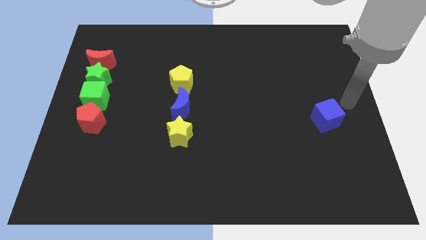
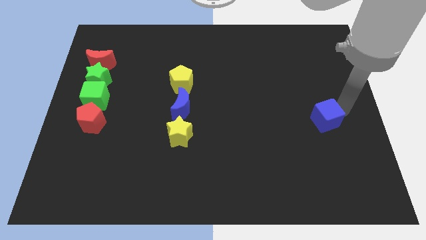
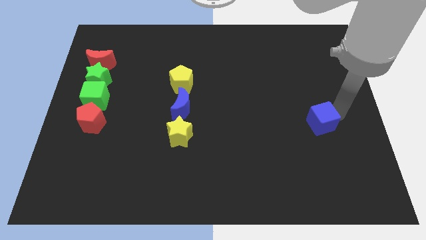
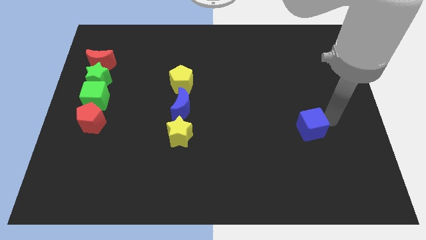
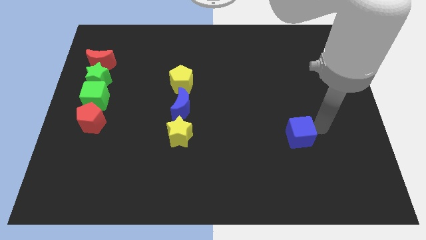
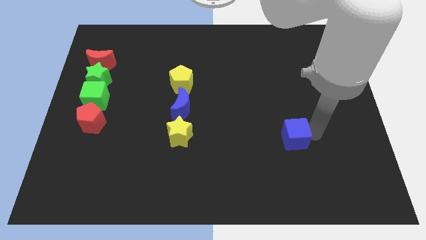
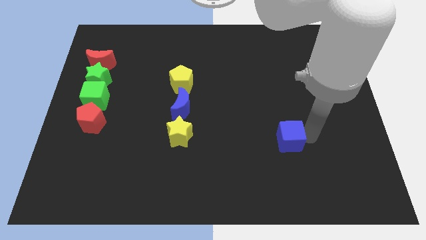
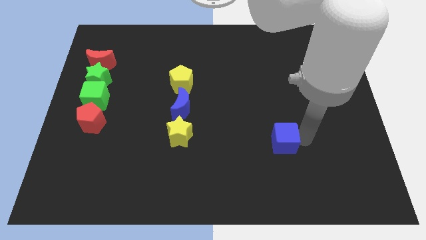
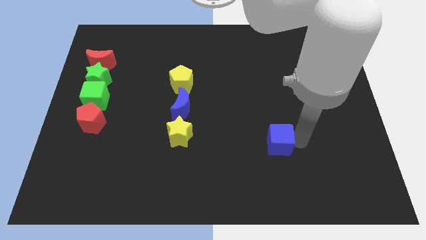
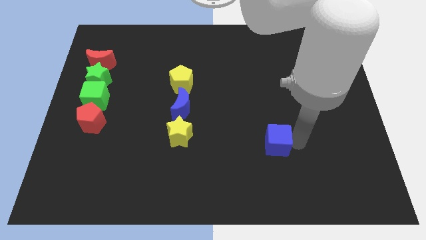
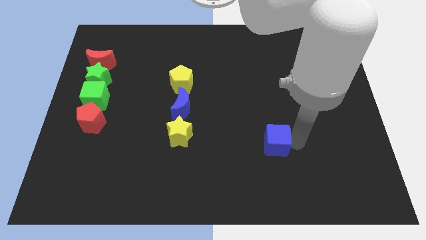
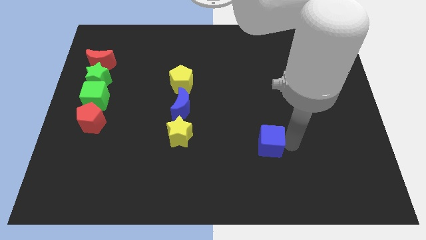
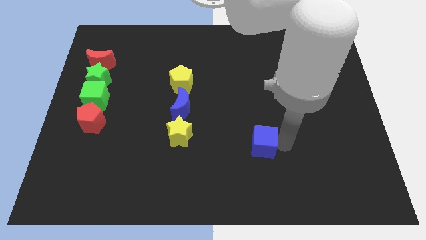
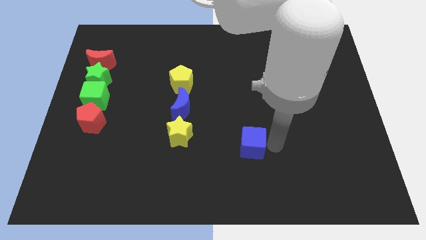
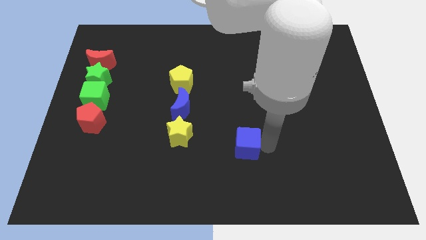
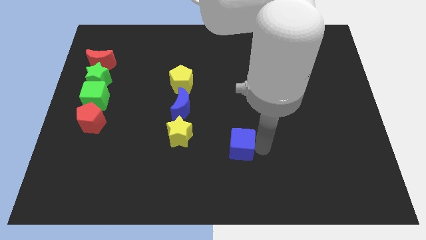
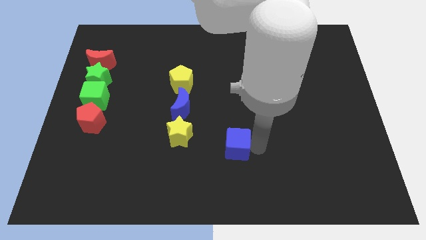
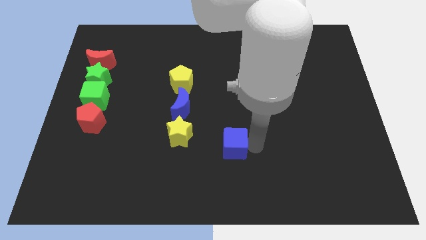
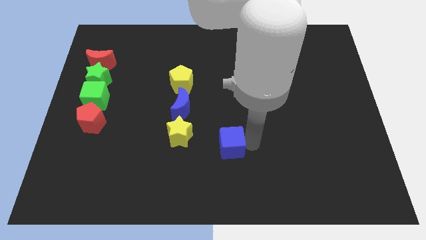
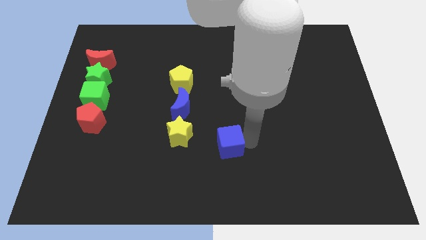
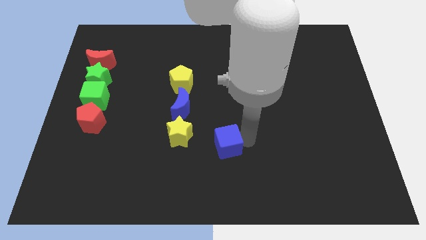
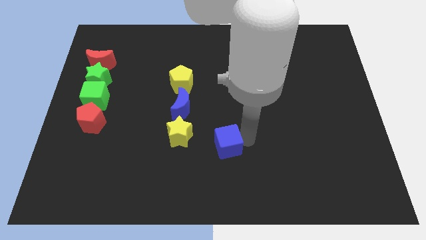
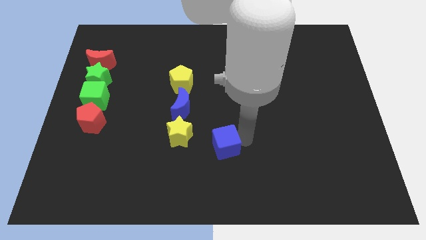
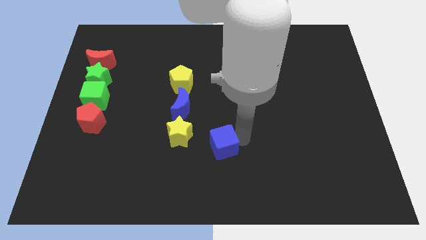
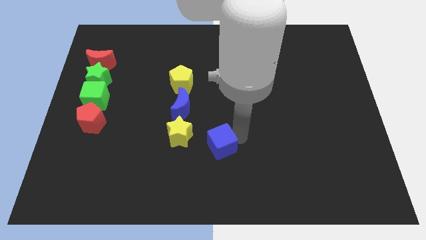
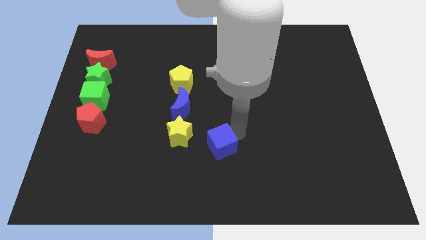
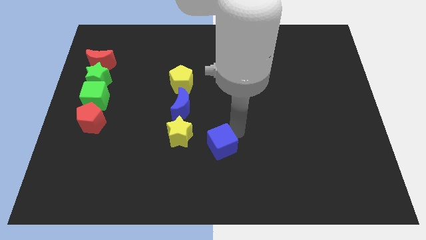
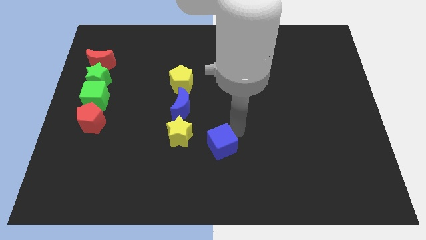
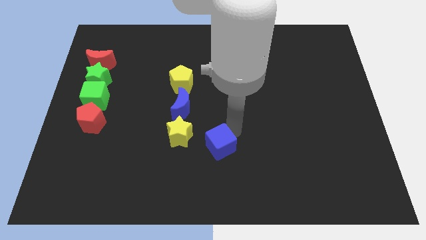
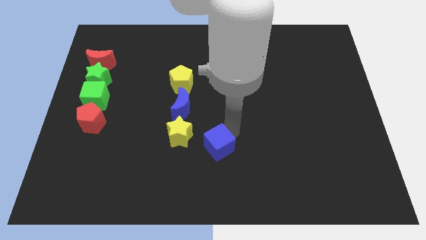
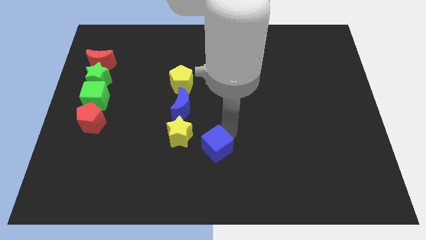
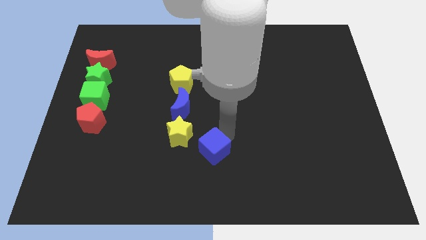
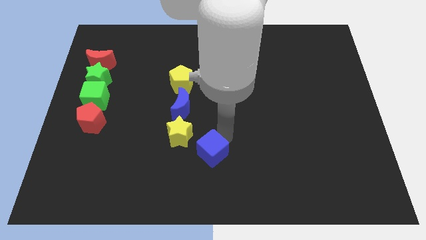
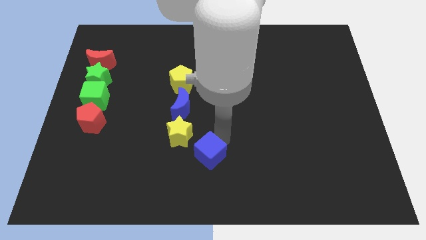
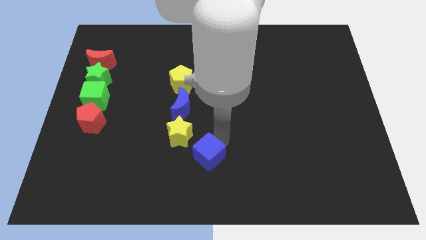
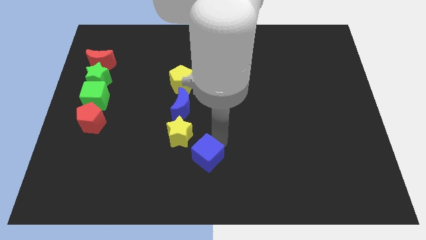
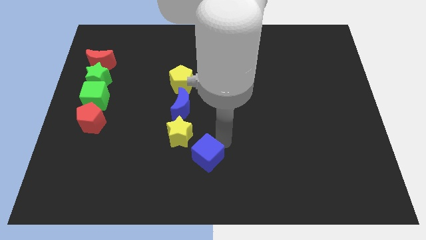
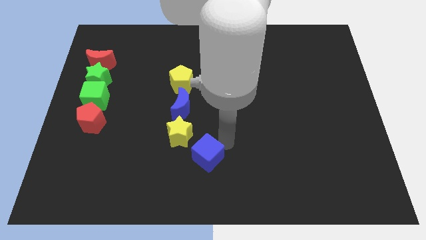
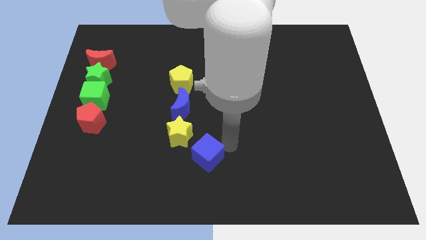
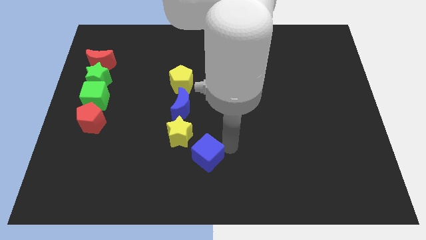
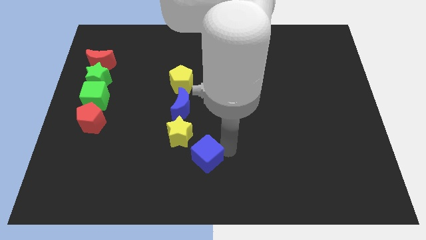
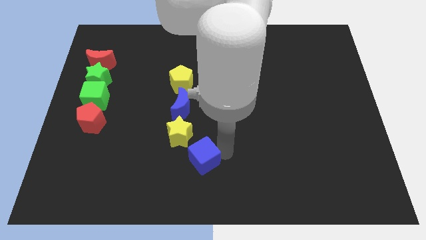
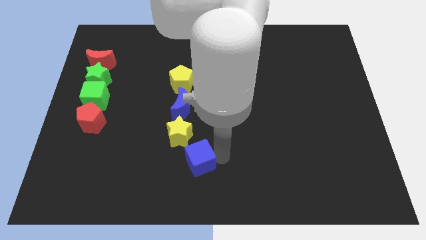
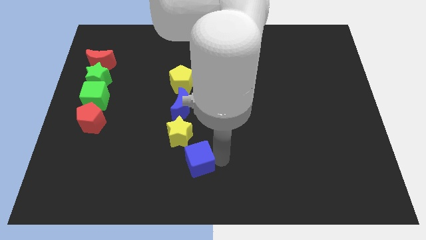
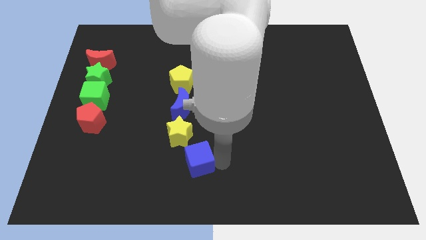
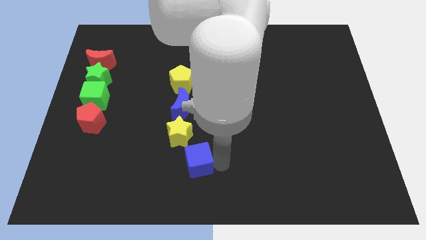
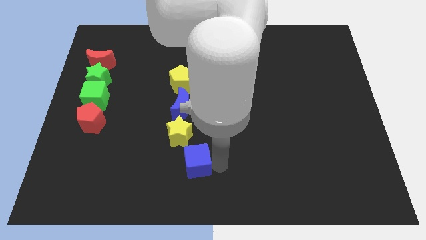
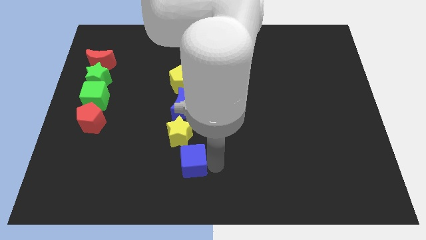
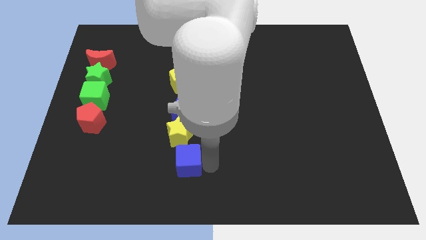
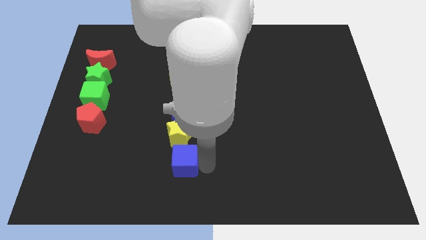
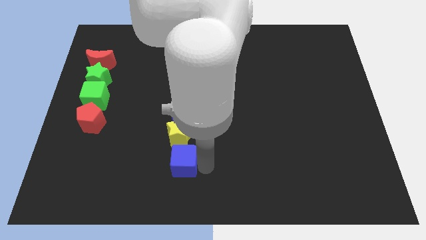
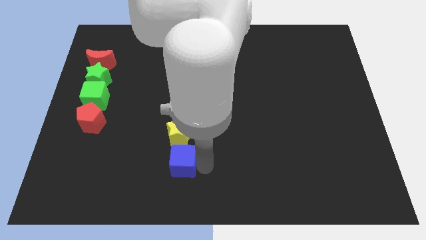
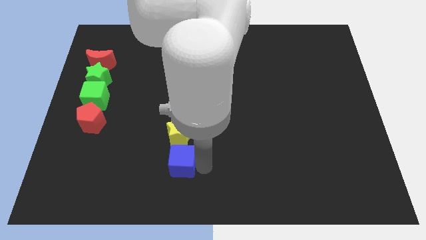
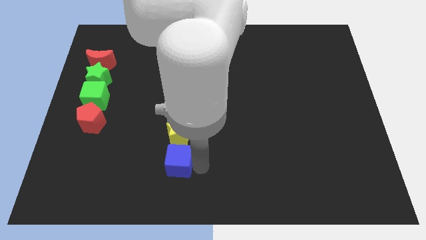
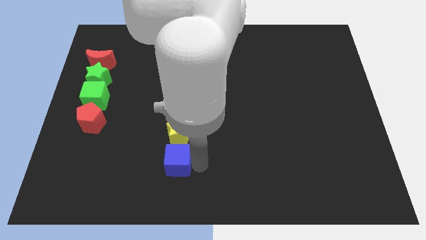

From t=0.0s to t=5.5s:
place blue cube below yellow star

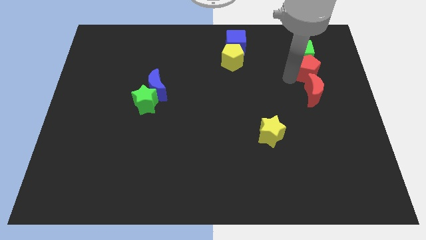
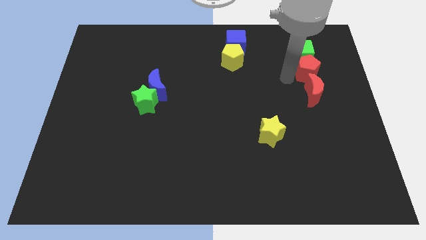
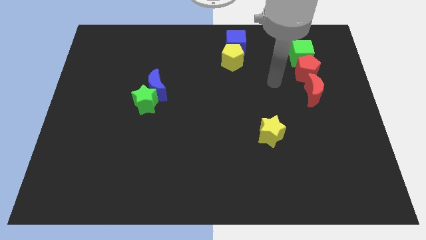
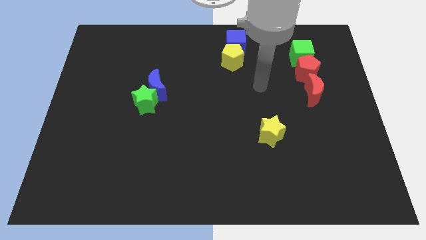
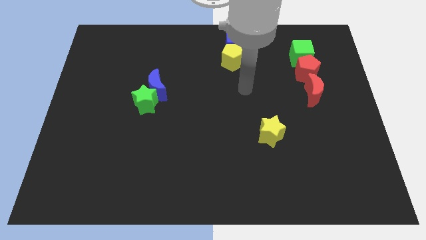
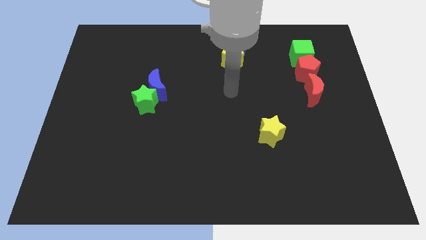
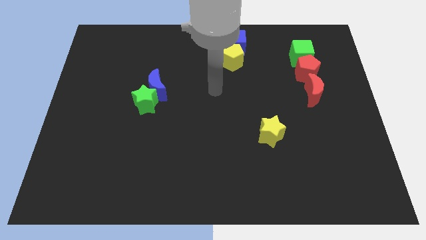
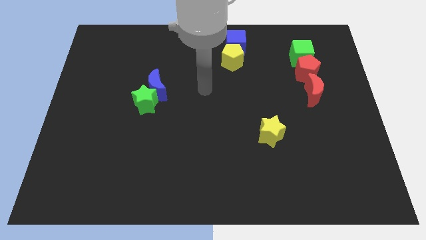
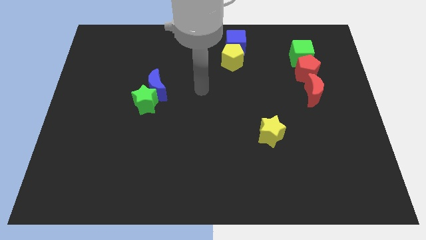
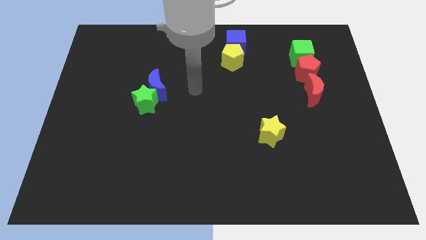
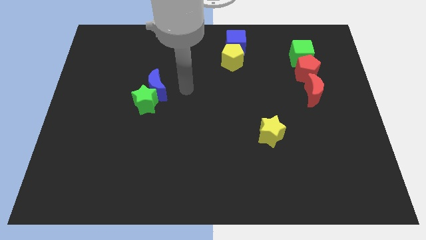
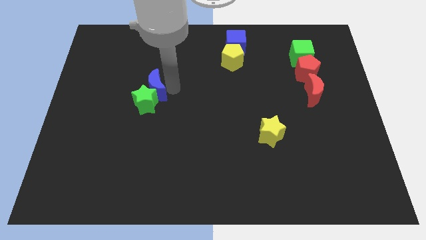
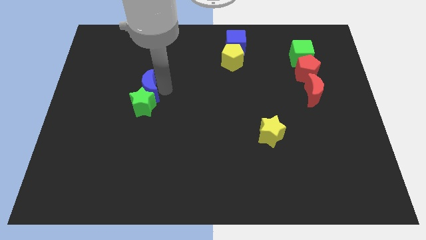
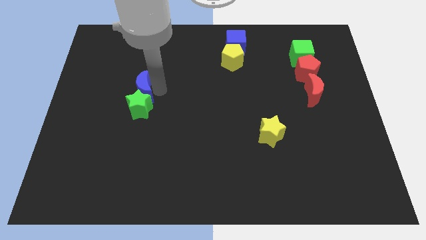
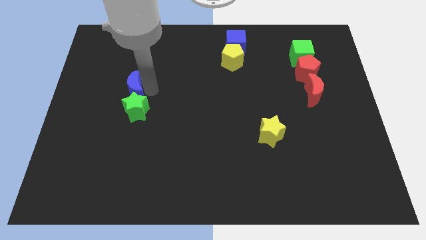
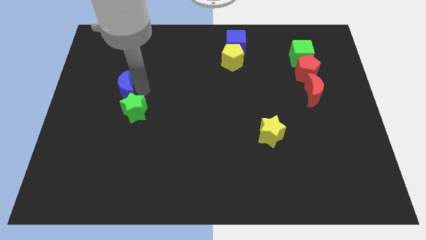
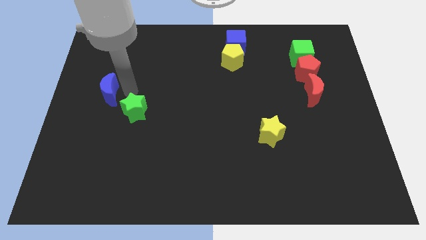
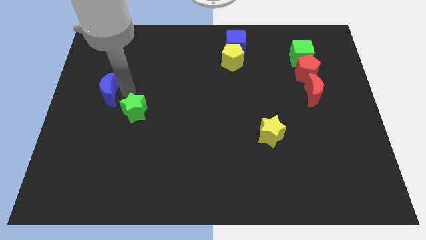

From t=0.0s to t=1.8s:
move blue moon slightly left

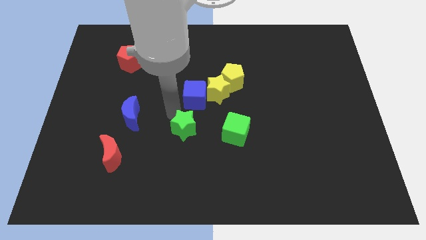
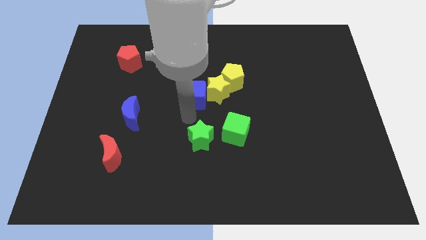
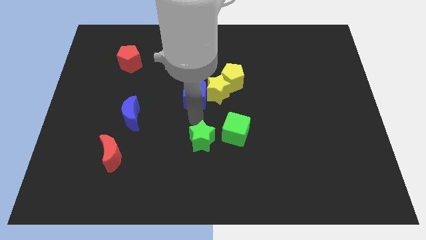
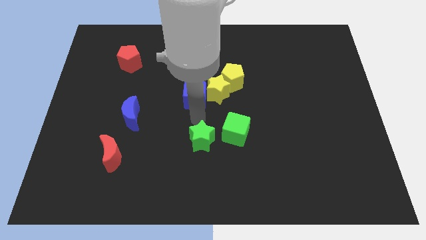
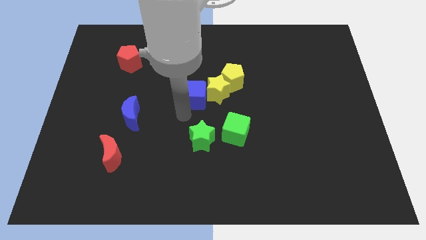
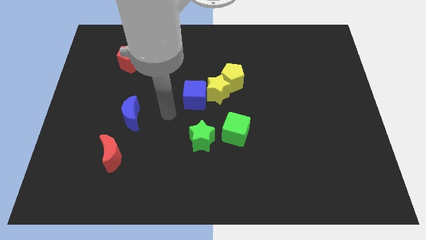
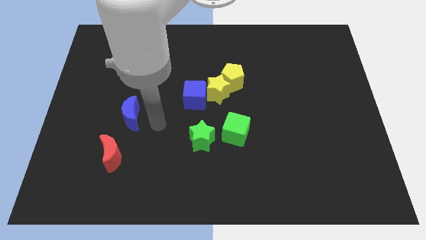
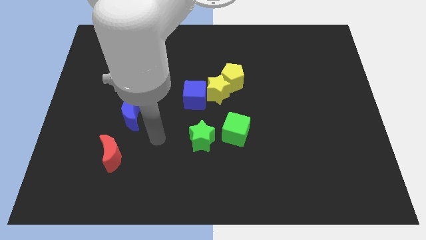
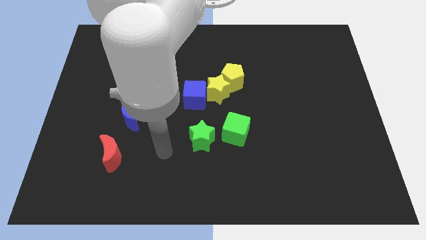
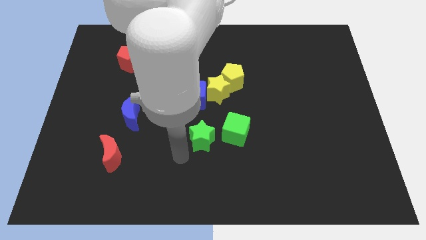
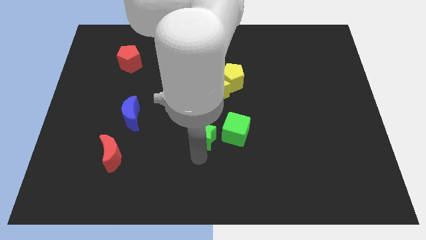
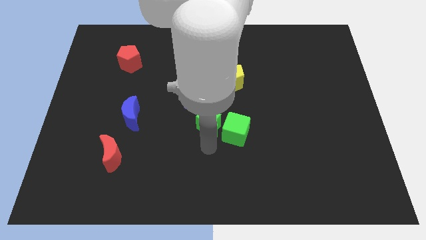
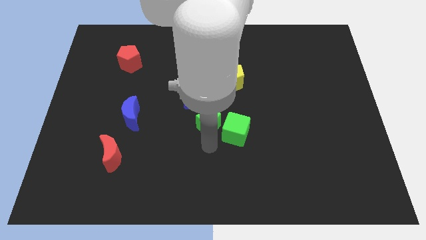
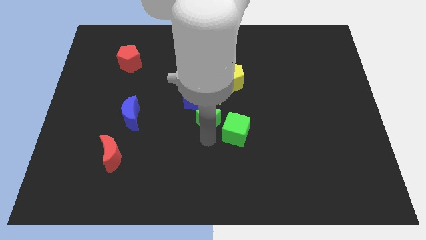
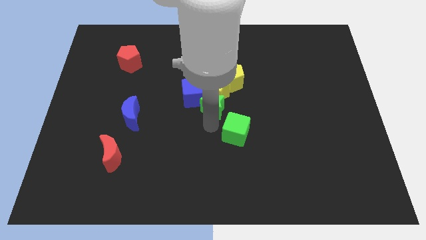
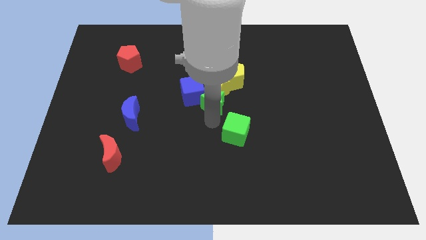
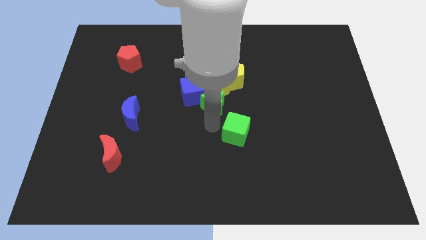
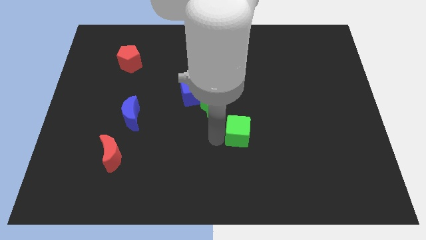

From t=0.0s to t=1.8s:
push the green star into the blue cube
